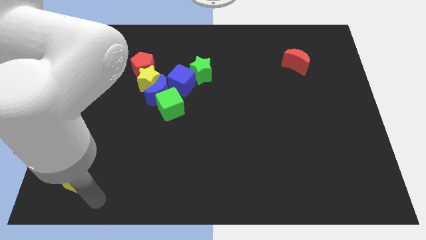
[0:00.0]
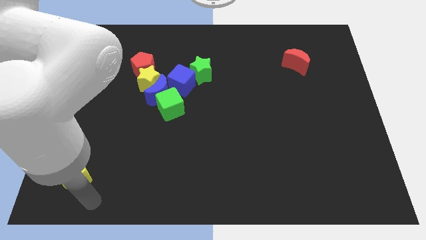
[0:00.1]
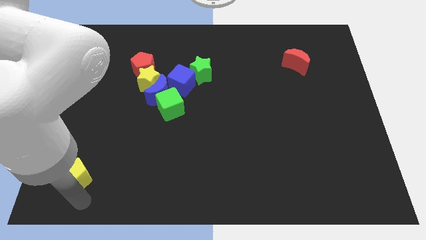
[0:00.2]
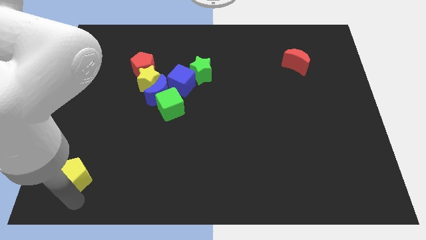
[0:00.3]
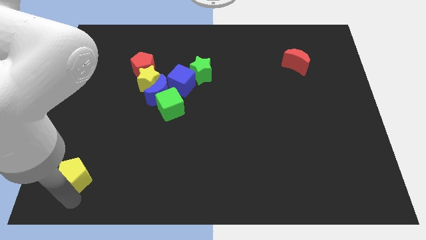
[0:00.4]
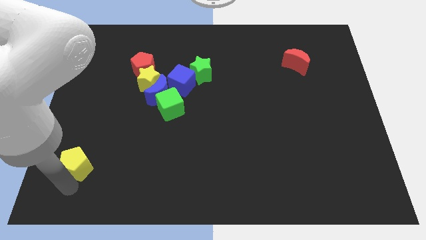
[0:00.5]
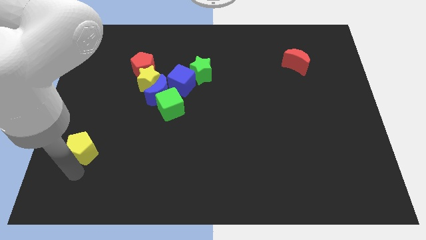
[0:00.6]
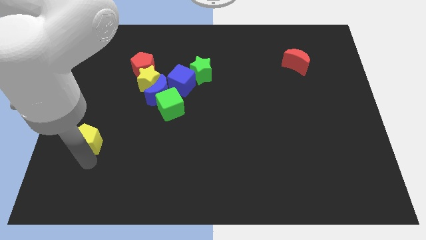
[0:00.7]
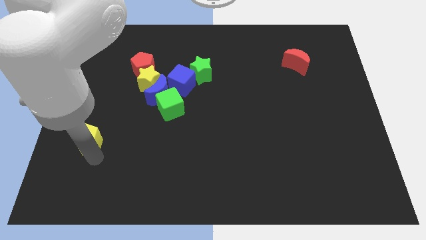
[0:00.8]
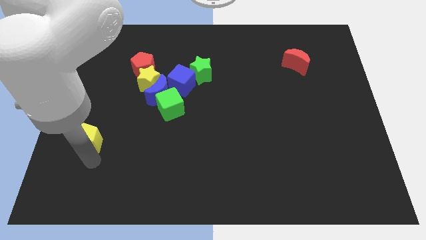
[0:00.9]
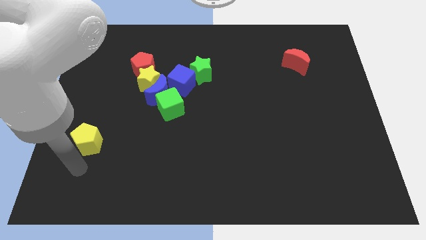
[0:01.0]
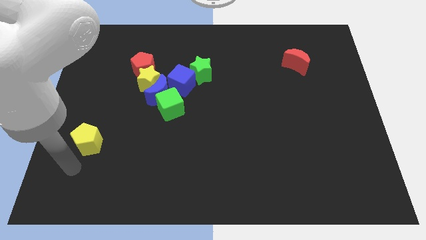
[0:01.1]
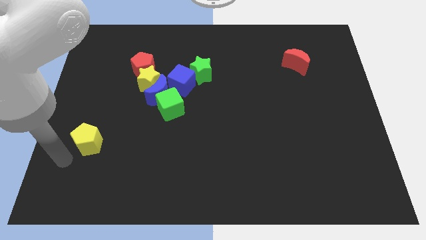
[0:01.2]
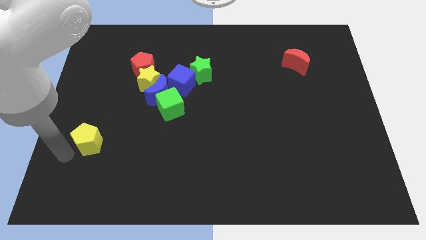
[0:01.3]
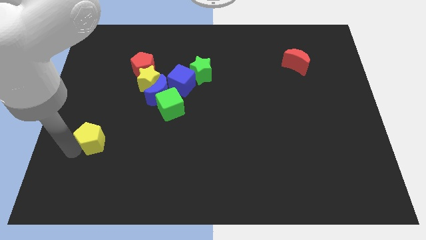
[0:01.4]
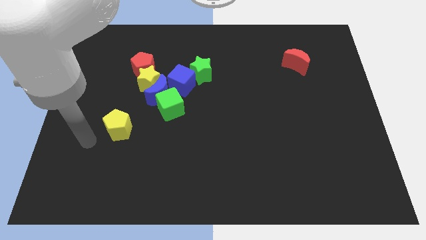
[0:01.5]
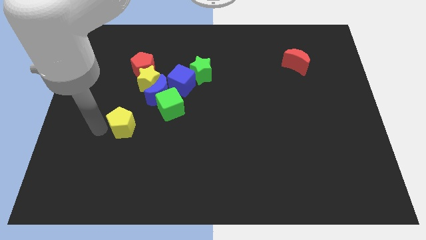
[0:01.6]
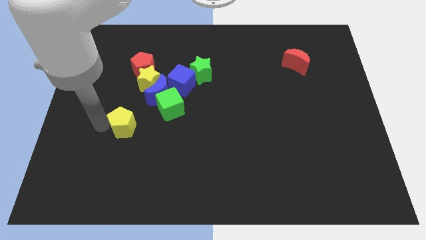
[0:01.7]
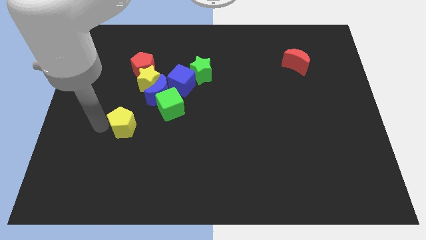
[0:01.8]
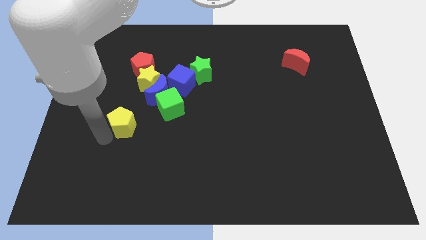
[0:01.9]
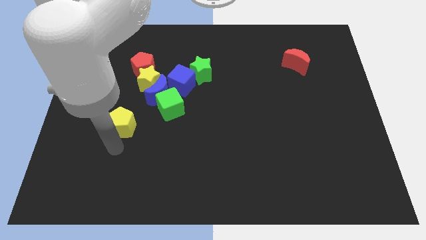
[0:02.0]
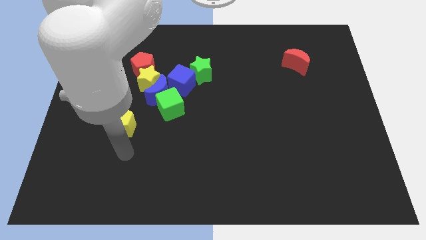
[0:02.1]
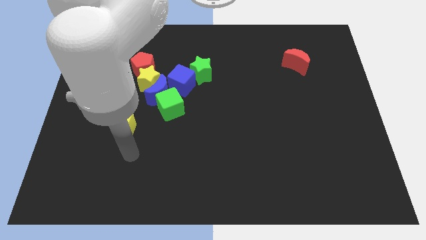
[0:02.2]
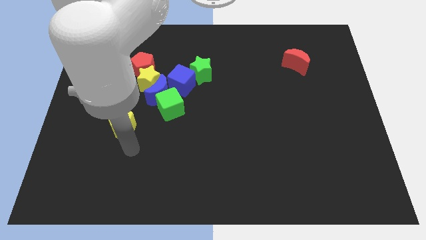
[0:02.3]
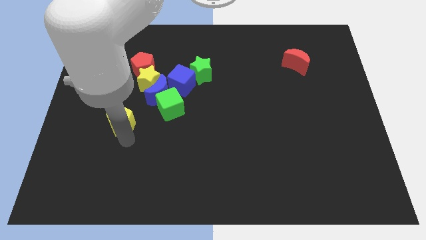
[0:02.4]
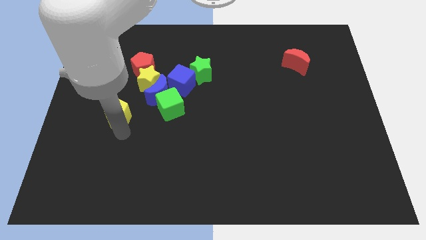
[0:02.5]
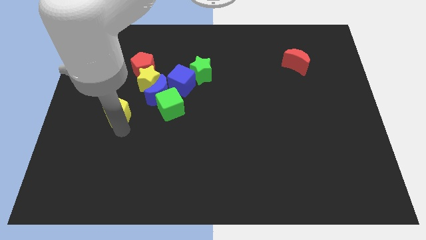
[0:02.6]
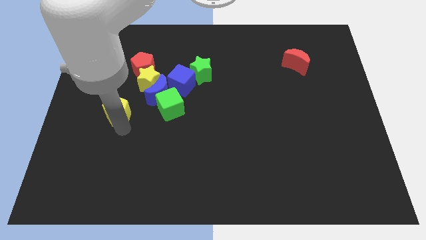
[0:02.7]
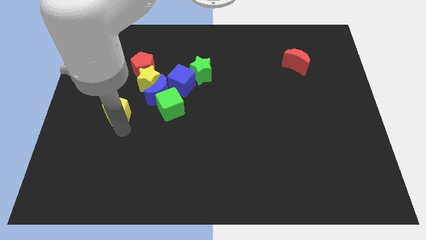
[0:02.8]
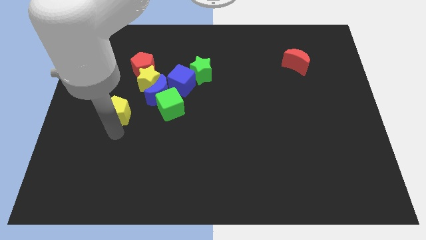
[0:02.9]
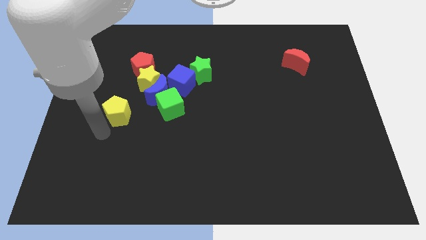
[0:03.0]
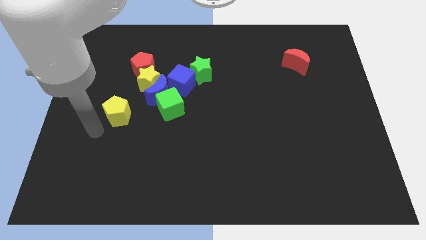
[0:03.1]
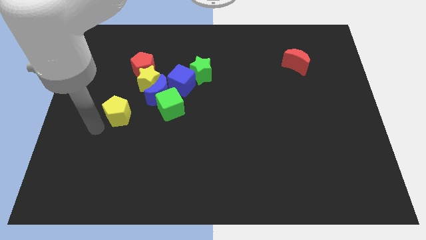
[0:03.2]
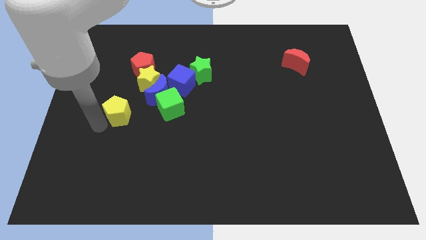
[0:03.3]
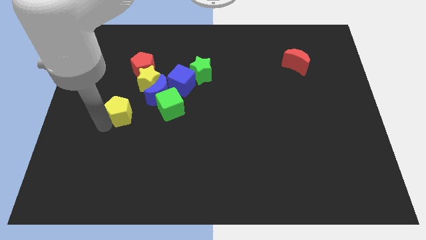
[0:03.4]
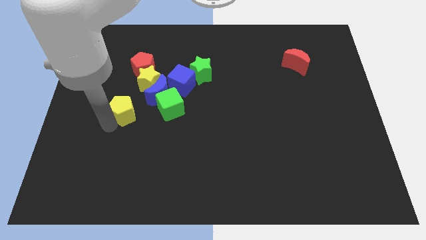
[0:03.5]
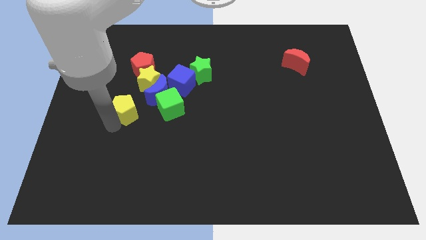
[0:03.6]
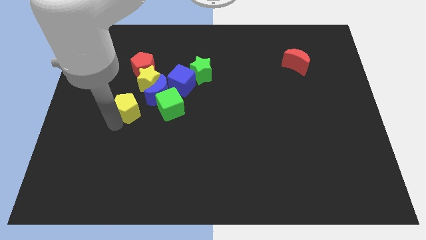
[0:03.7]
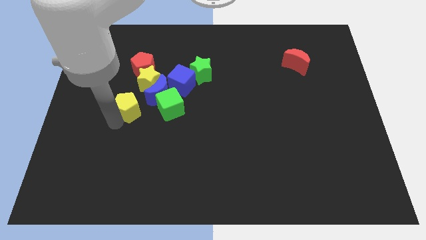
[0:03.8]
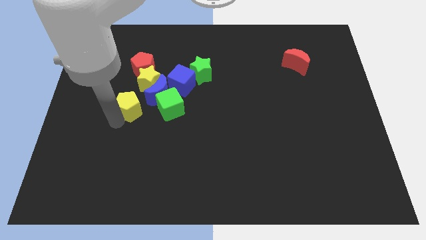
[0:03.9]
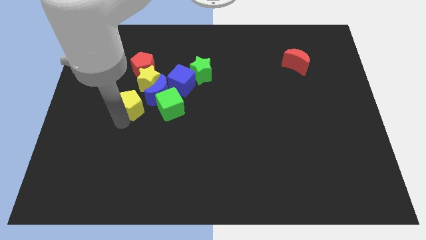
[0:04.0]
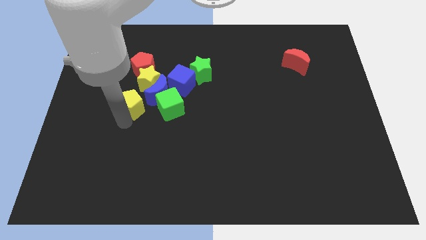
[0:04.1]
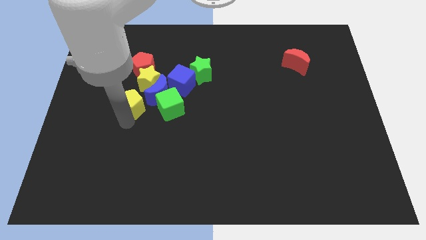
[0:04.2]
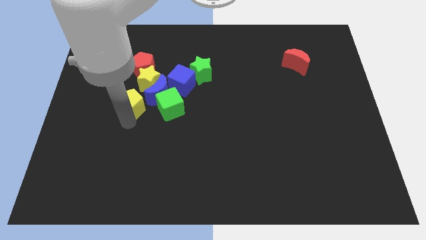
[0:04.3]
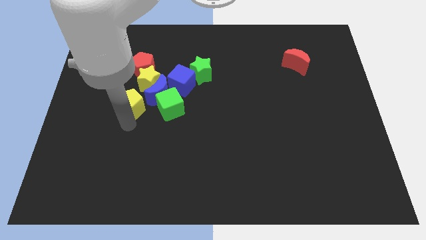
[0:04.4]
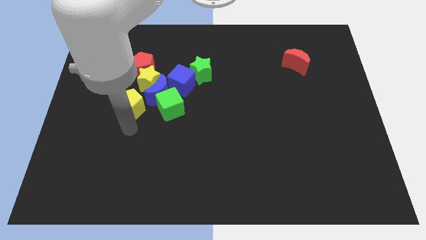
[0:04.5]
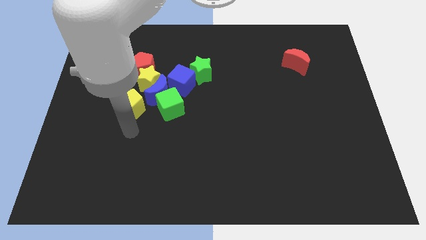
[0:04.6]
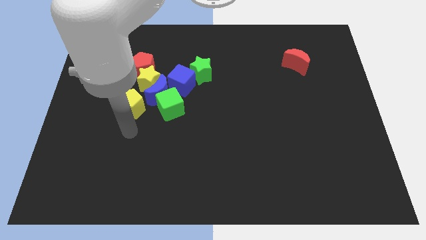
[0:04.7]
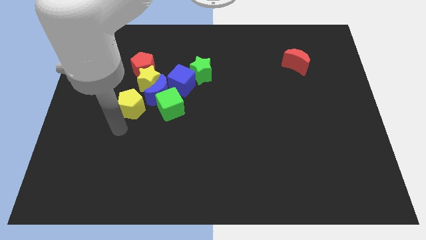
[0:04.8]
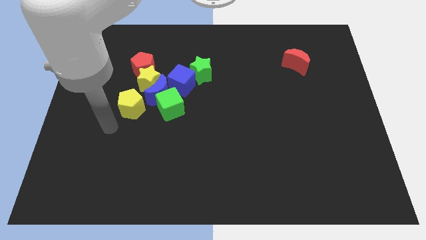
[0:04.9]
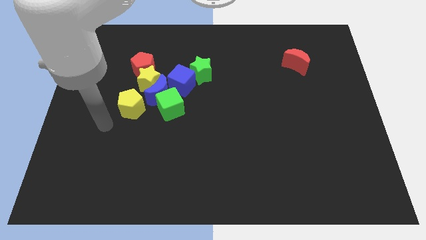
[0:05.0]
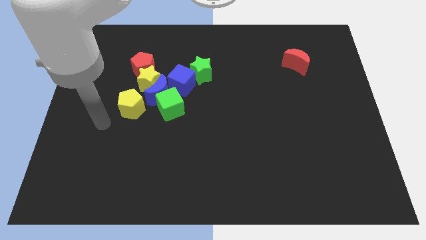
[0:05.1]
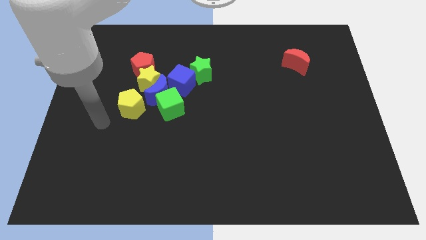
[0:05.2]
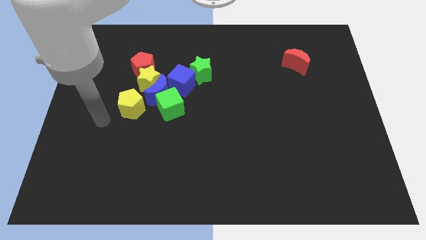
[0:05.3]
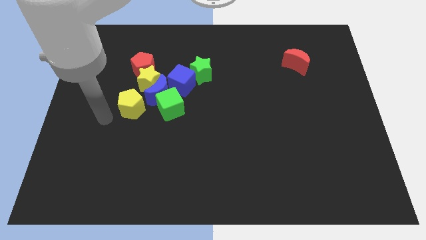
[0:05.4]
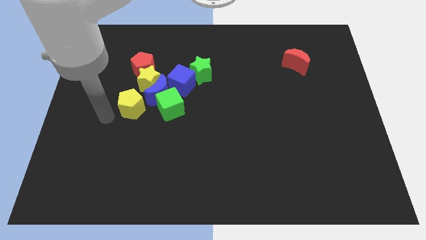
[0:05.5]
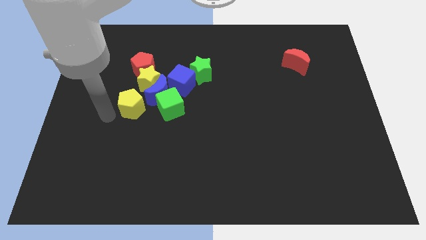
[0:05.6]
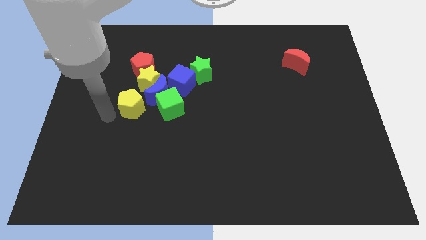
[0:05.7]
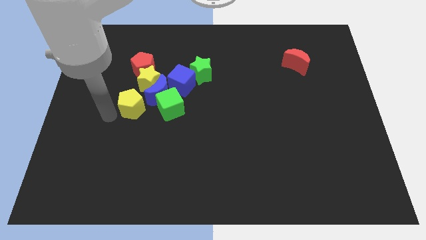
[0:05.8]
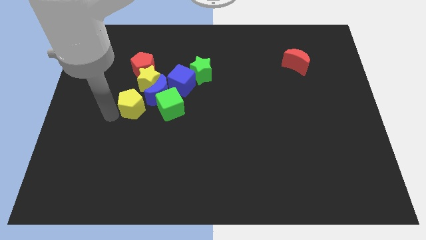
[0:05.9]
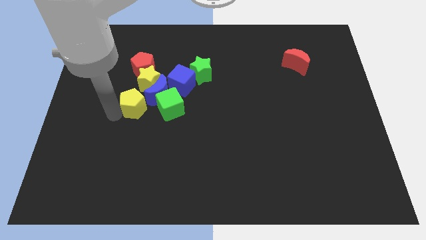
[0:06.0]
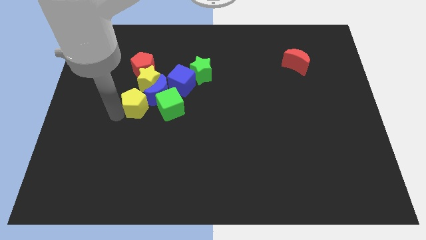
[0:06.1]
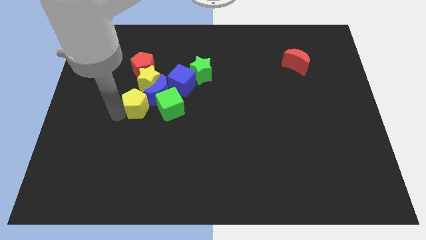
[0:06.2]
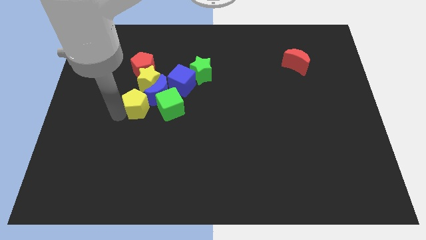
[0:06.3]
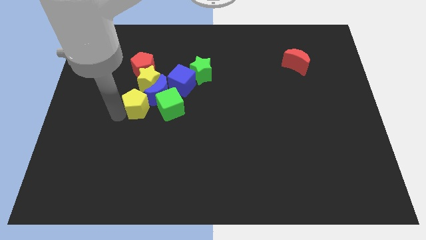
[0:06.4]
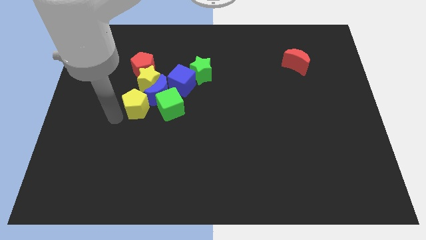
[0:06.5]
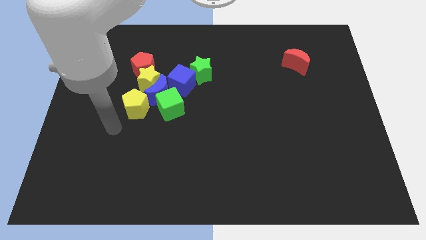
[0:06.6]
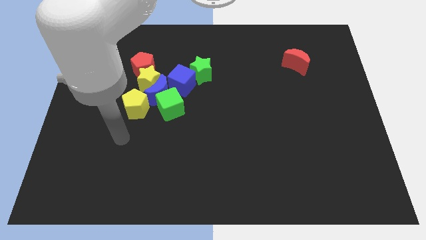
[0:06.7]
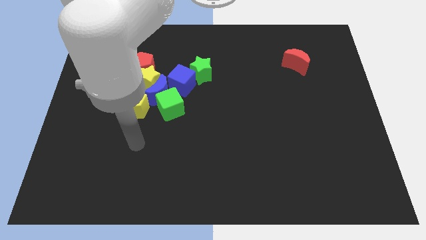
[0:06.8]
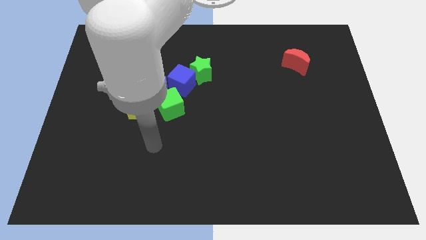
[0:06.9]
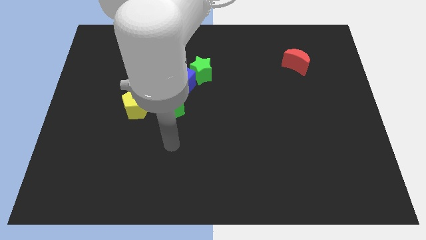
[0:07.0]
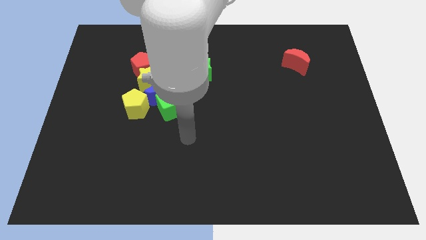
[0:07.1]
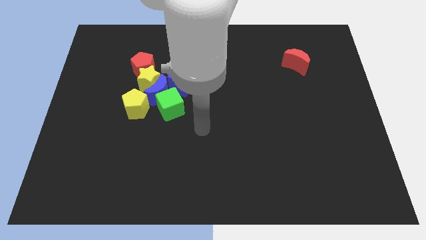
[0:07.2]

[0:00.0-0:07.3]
move the yellow pentagon into the blue crescent

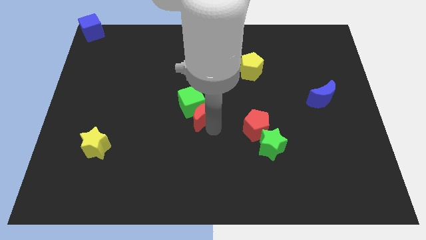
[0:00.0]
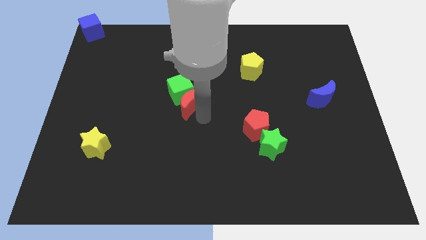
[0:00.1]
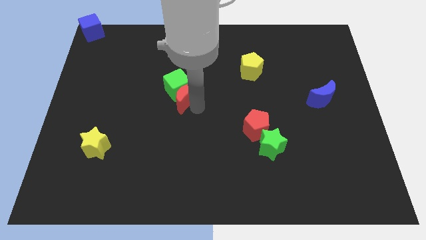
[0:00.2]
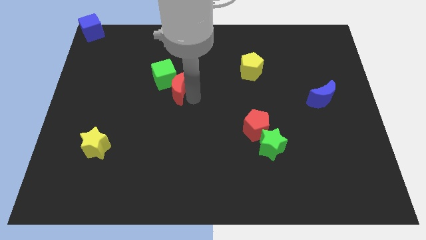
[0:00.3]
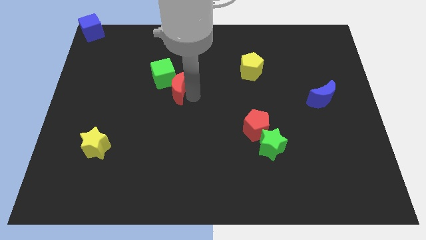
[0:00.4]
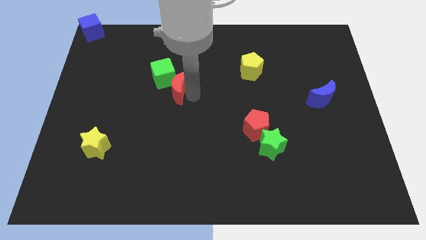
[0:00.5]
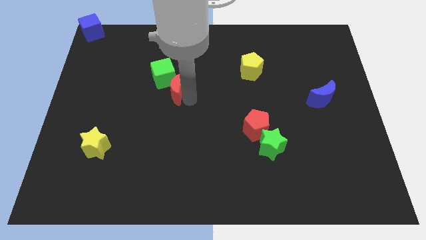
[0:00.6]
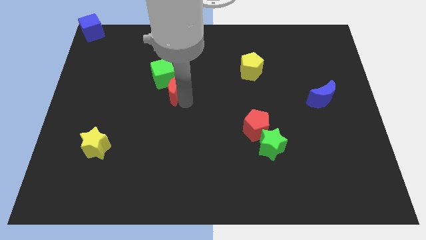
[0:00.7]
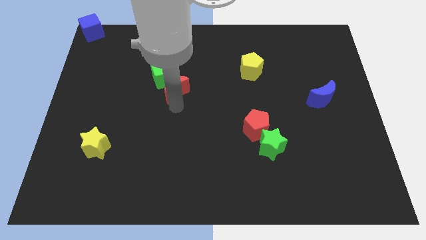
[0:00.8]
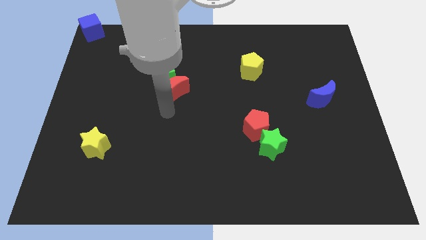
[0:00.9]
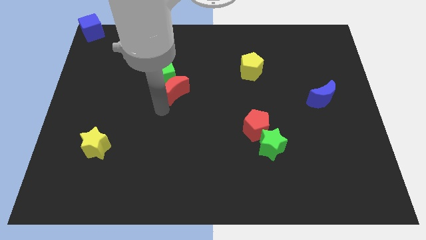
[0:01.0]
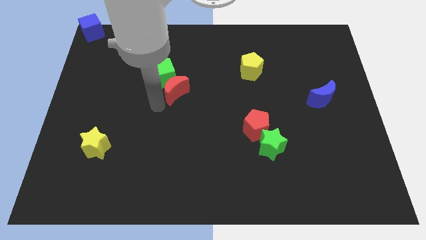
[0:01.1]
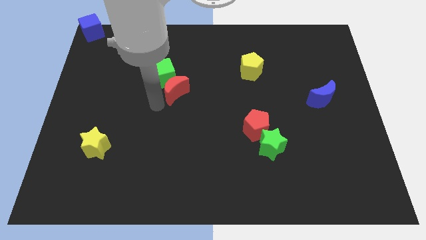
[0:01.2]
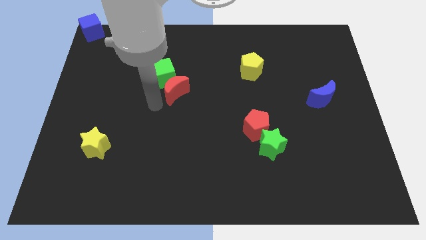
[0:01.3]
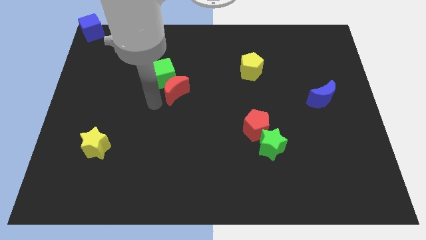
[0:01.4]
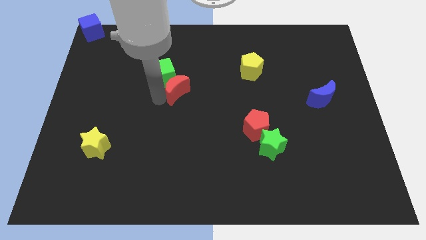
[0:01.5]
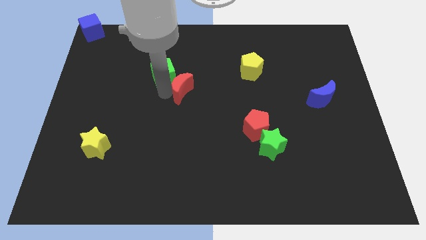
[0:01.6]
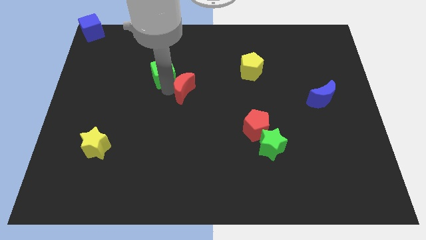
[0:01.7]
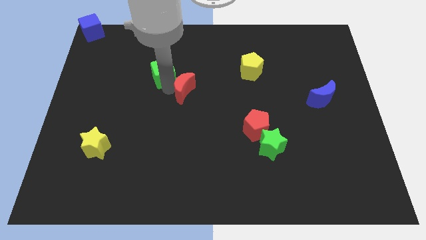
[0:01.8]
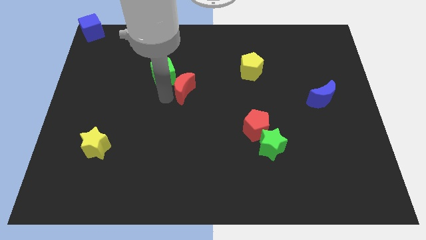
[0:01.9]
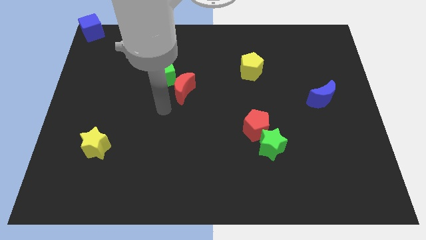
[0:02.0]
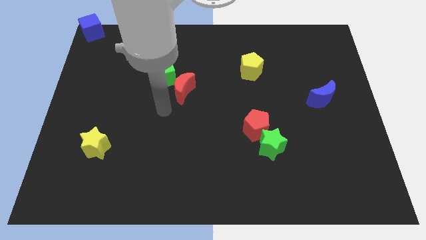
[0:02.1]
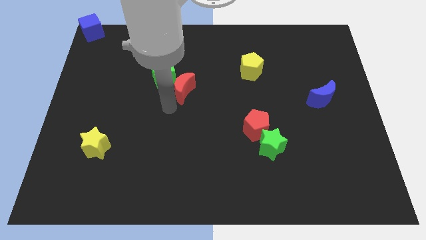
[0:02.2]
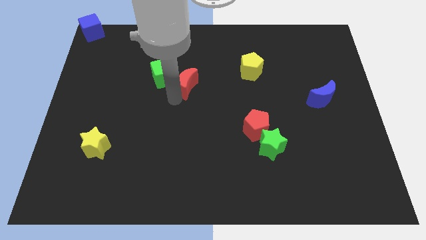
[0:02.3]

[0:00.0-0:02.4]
move the green cube along with the red crescent towards the top
